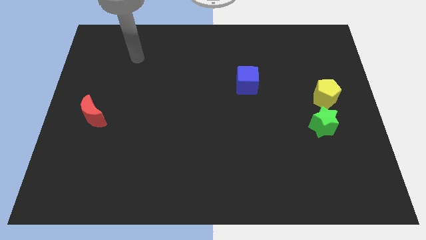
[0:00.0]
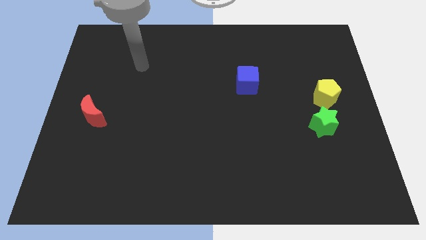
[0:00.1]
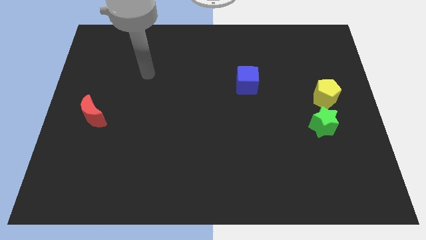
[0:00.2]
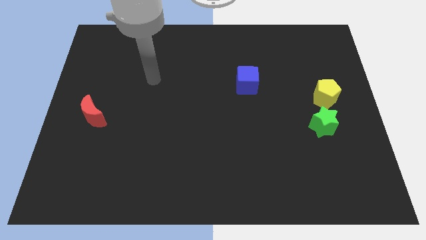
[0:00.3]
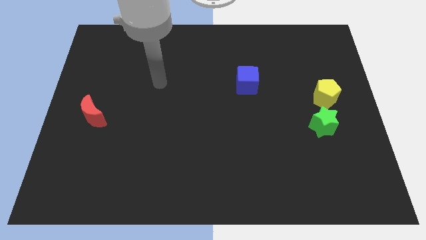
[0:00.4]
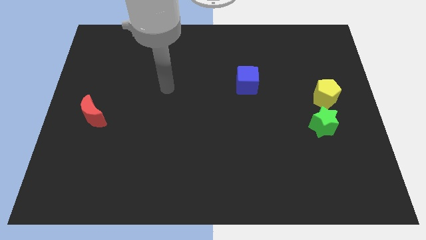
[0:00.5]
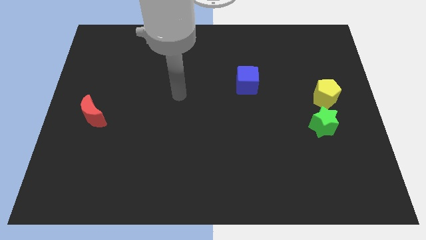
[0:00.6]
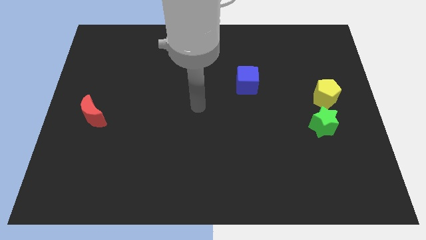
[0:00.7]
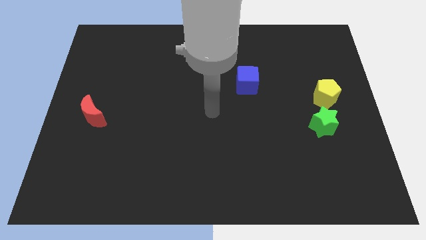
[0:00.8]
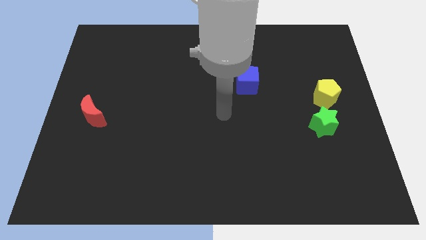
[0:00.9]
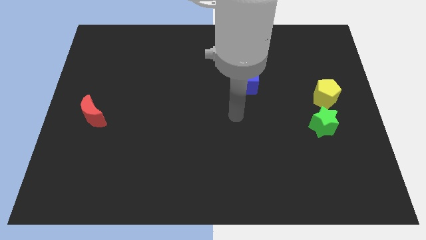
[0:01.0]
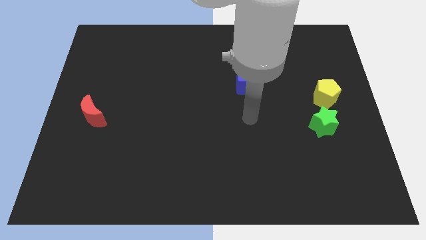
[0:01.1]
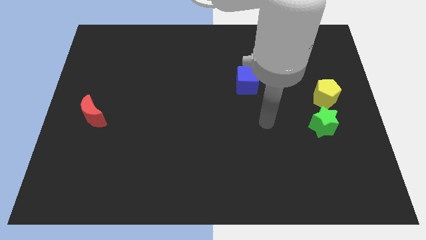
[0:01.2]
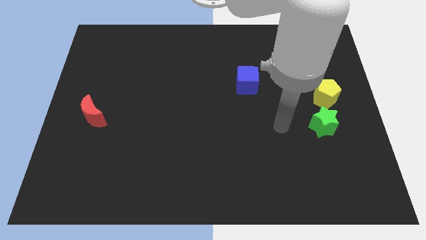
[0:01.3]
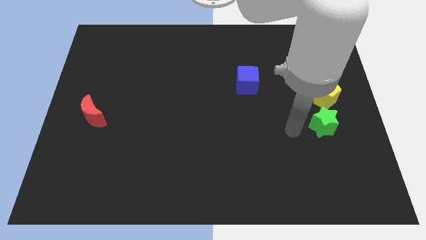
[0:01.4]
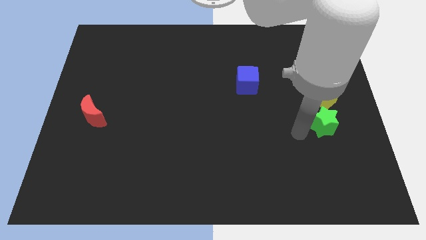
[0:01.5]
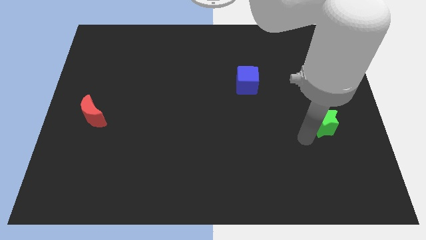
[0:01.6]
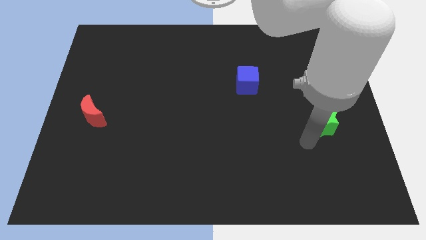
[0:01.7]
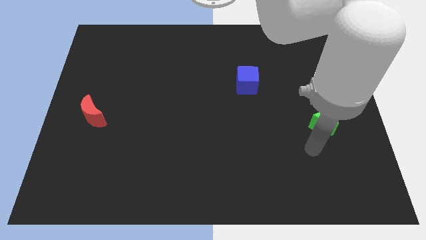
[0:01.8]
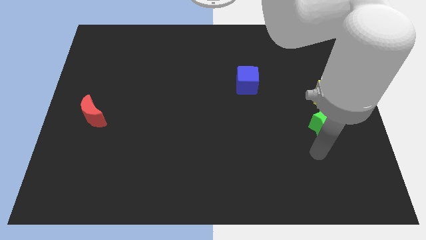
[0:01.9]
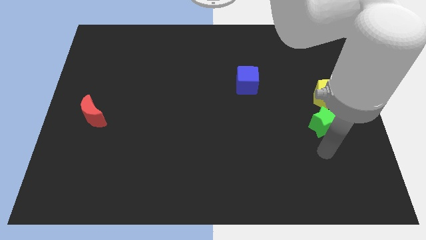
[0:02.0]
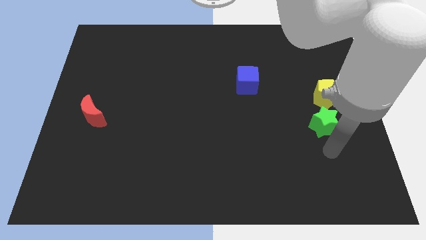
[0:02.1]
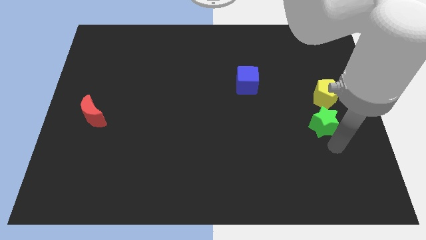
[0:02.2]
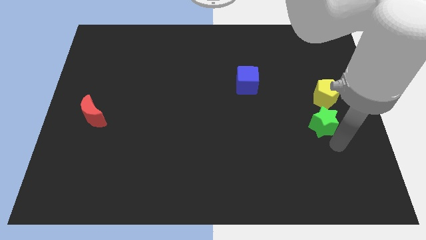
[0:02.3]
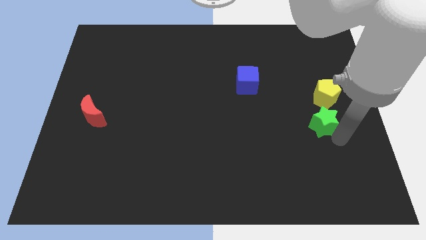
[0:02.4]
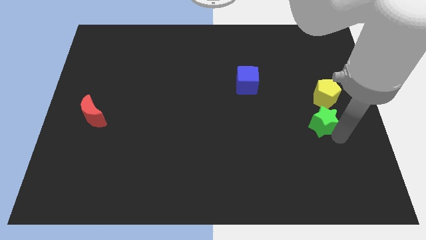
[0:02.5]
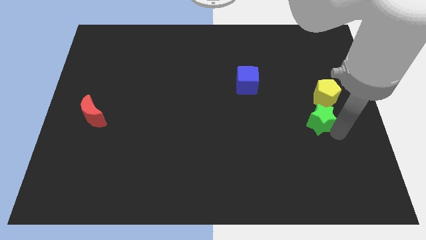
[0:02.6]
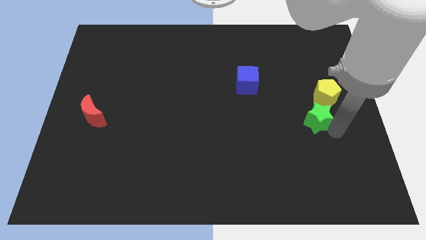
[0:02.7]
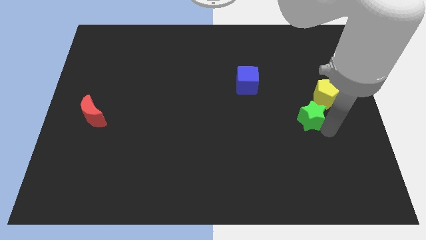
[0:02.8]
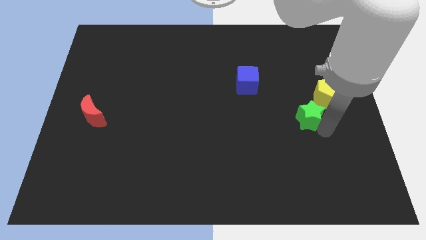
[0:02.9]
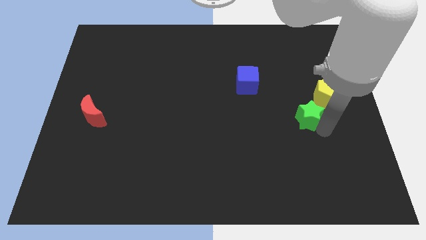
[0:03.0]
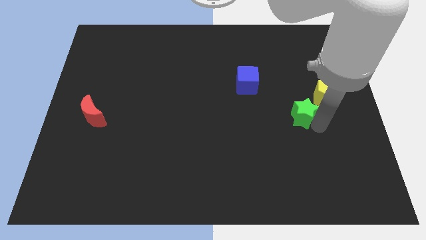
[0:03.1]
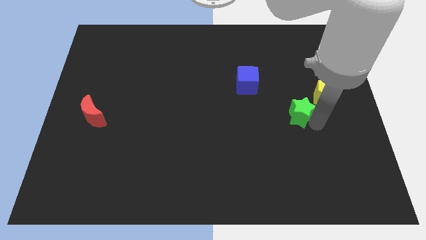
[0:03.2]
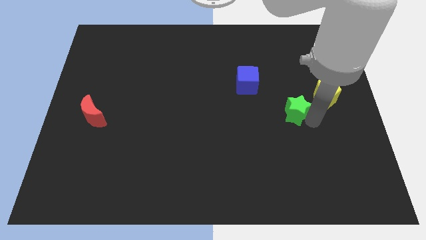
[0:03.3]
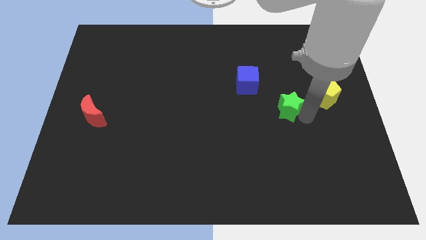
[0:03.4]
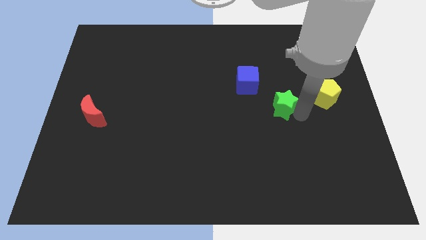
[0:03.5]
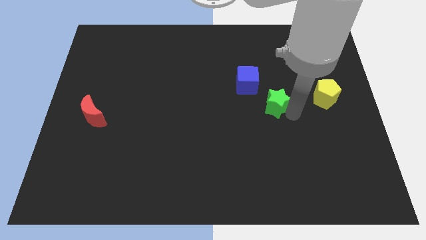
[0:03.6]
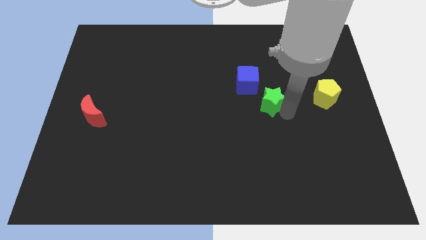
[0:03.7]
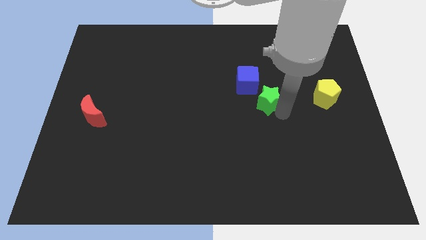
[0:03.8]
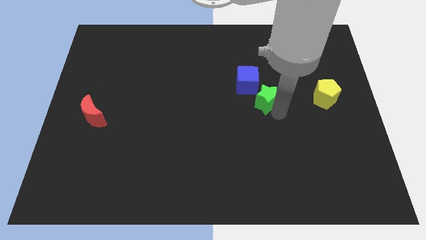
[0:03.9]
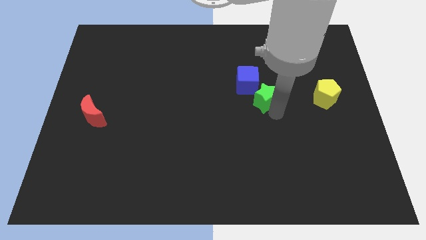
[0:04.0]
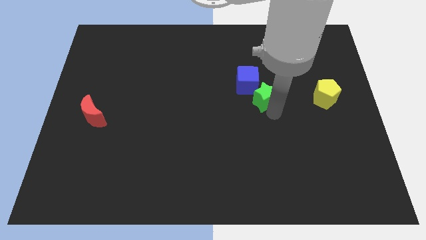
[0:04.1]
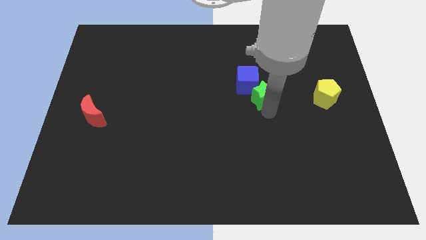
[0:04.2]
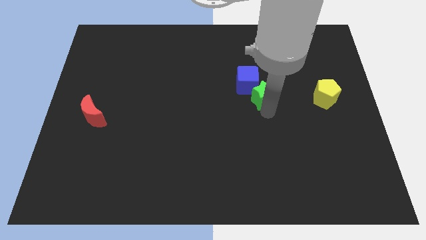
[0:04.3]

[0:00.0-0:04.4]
put the star towards the blue block

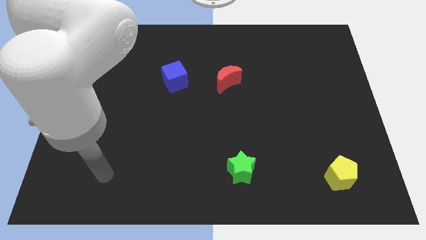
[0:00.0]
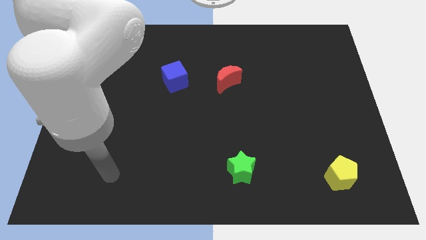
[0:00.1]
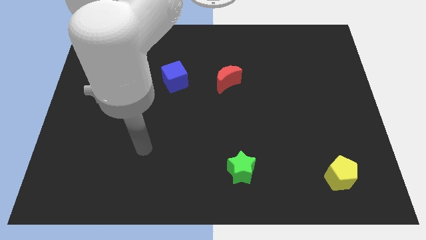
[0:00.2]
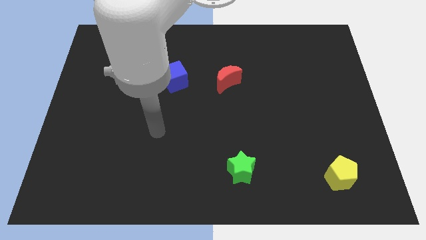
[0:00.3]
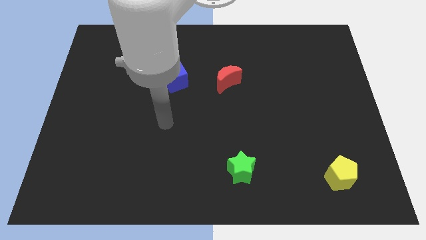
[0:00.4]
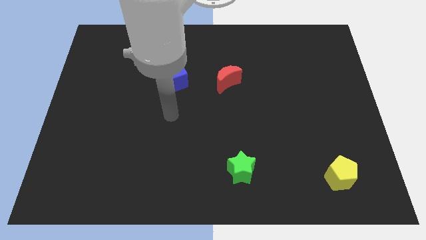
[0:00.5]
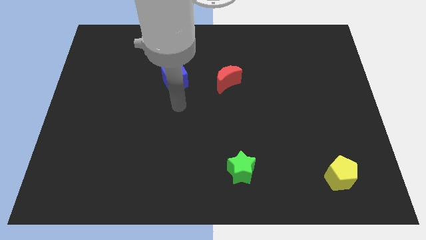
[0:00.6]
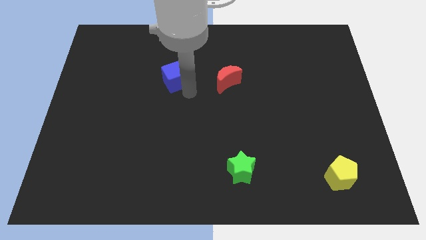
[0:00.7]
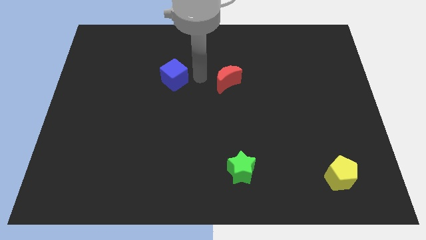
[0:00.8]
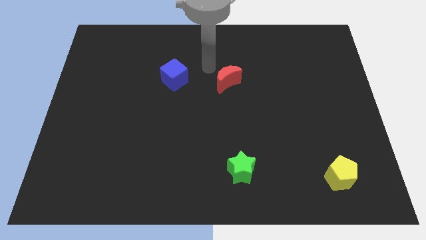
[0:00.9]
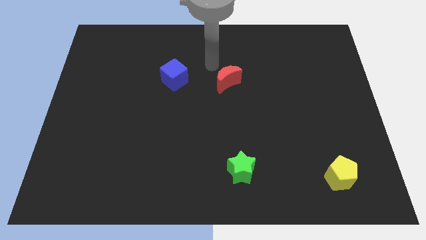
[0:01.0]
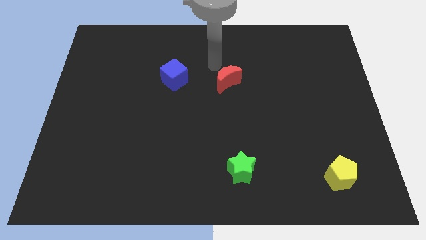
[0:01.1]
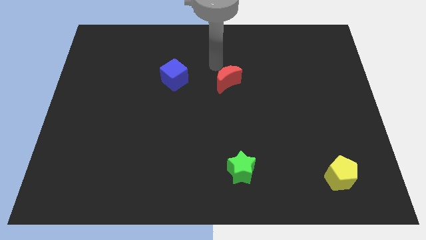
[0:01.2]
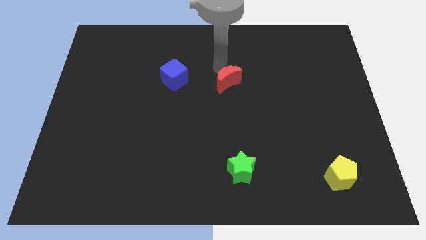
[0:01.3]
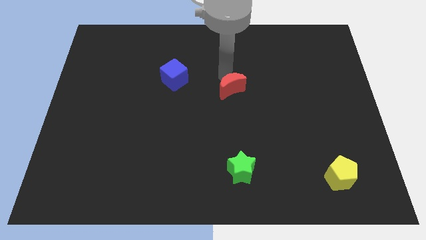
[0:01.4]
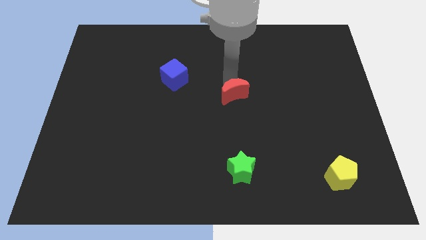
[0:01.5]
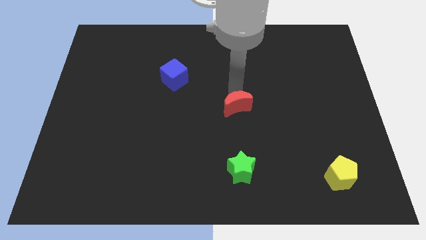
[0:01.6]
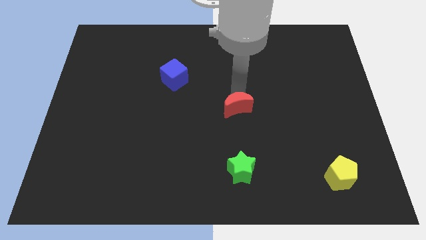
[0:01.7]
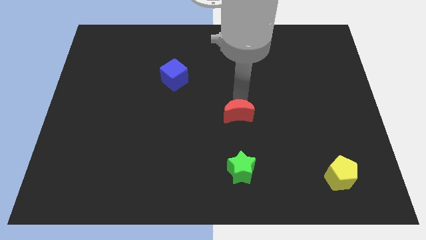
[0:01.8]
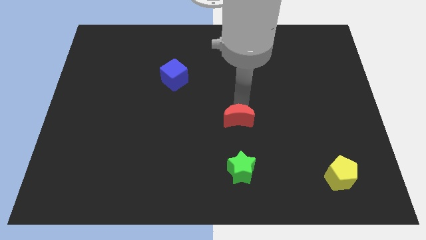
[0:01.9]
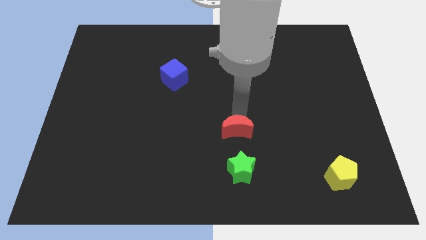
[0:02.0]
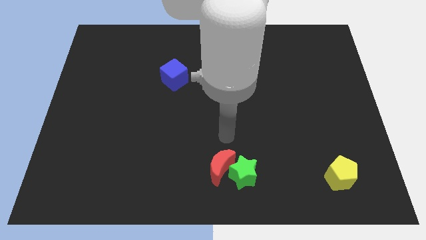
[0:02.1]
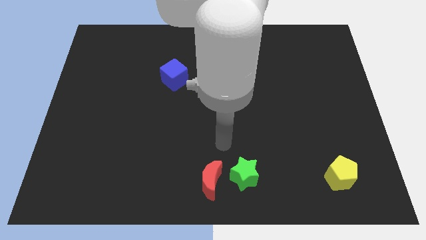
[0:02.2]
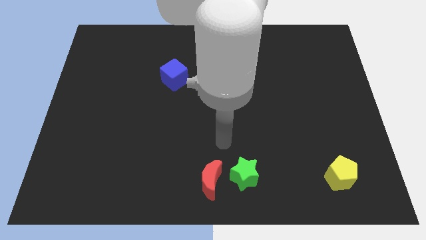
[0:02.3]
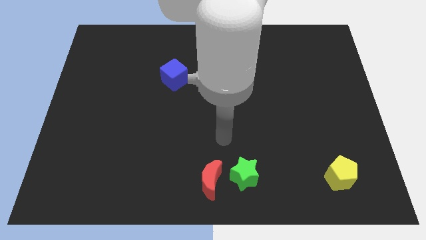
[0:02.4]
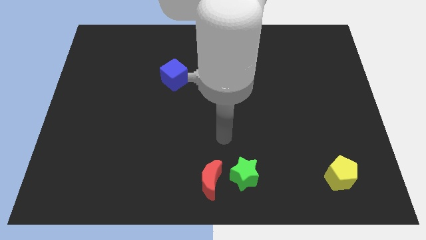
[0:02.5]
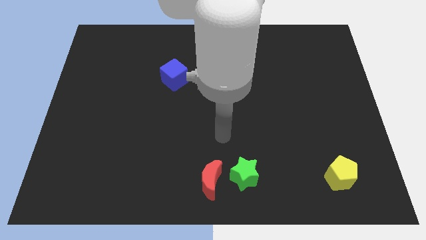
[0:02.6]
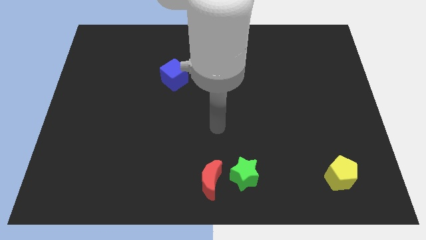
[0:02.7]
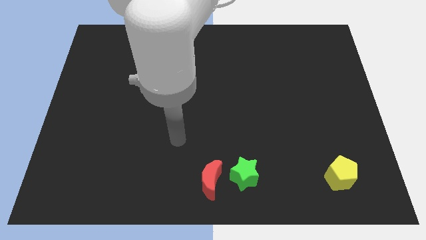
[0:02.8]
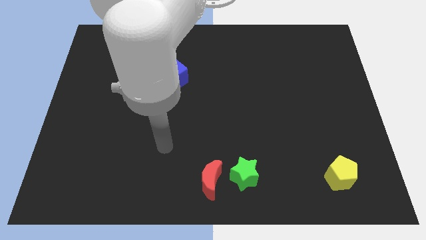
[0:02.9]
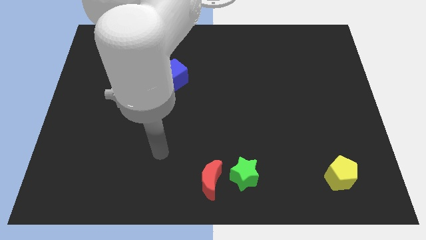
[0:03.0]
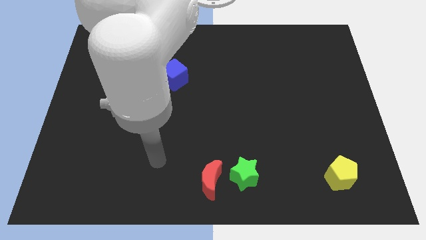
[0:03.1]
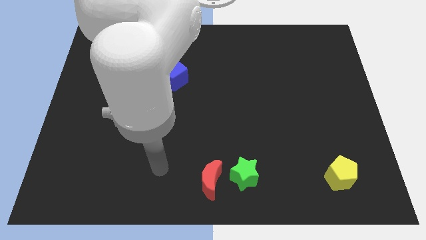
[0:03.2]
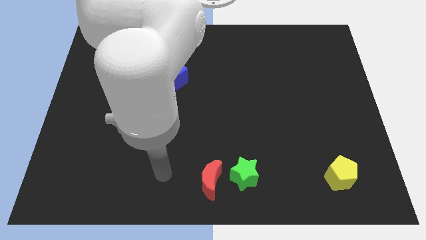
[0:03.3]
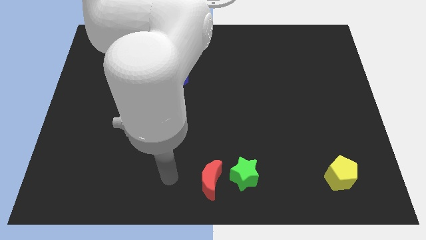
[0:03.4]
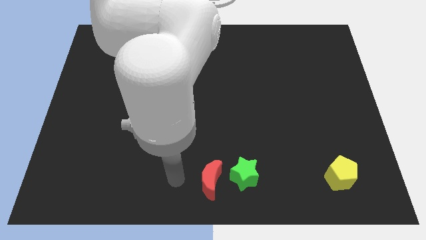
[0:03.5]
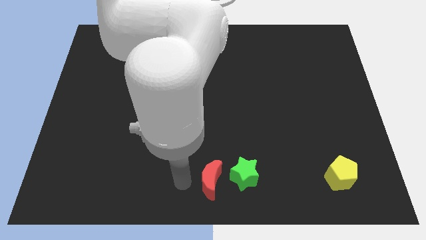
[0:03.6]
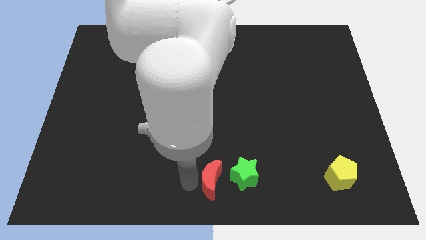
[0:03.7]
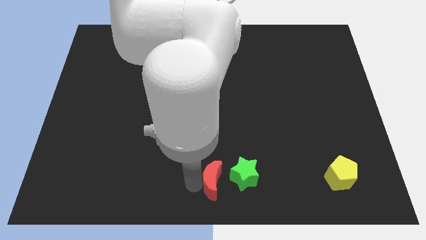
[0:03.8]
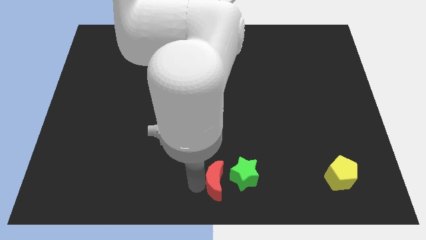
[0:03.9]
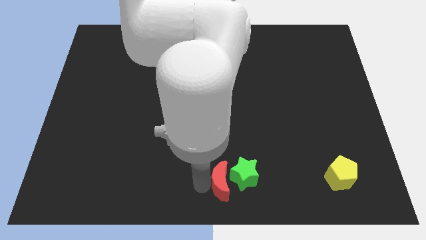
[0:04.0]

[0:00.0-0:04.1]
slide the moon next to the star
